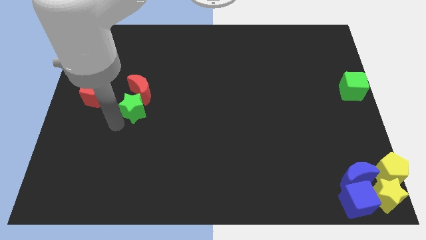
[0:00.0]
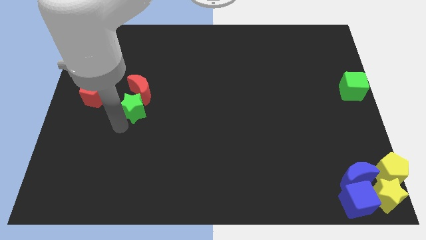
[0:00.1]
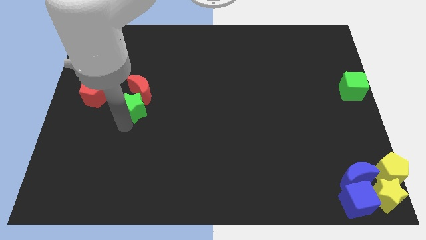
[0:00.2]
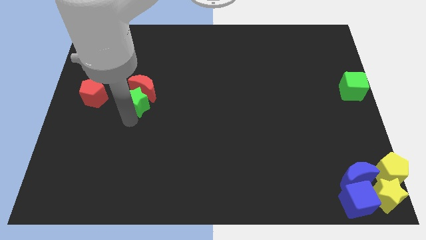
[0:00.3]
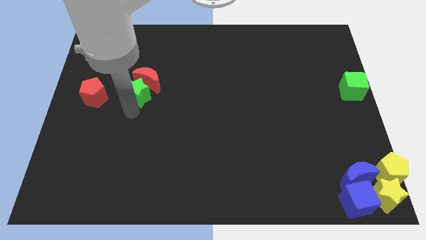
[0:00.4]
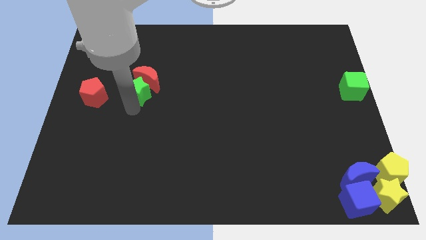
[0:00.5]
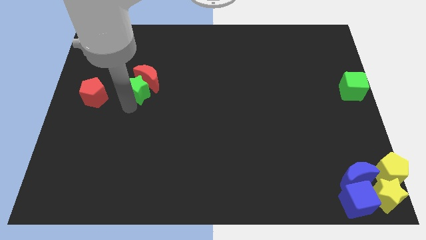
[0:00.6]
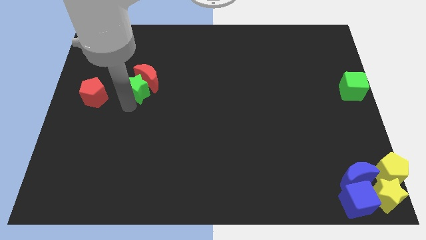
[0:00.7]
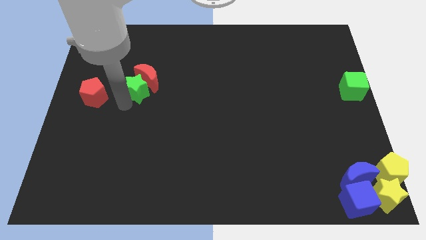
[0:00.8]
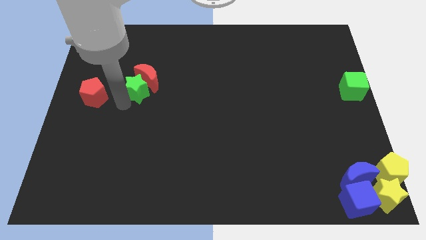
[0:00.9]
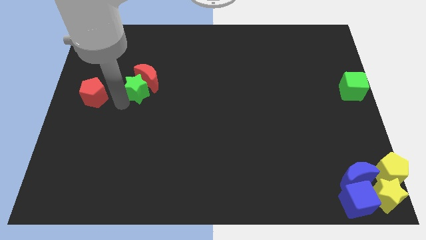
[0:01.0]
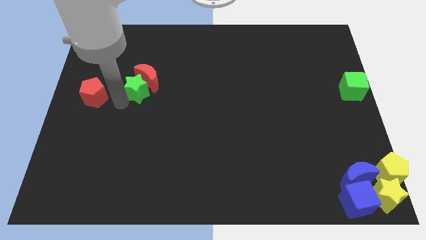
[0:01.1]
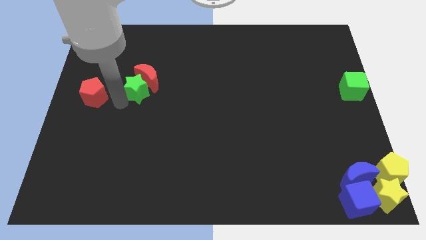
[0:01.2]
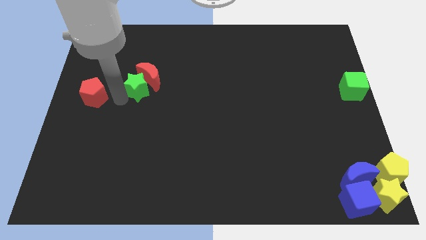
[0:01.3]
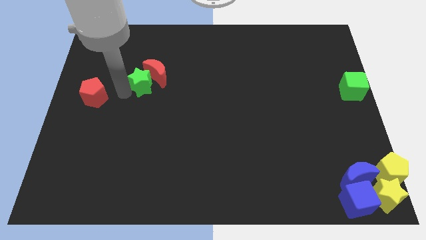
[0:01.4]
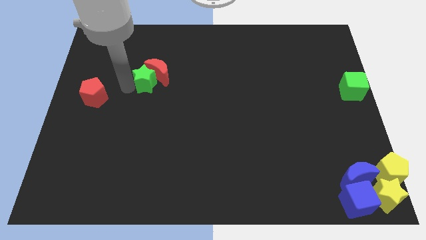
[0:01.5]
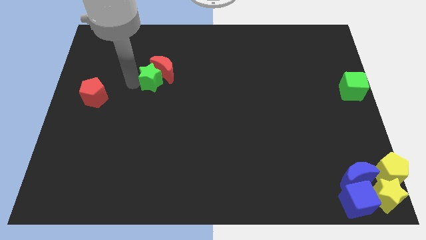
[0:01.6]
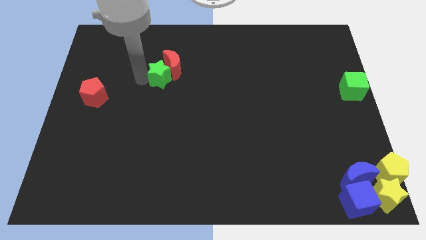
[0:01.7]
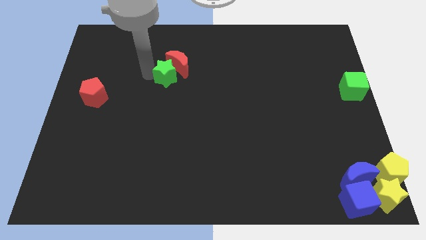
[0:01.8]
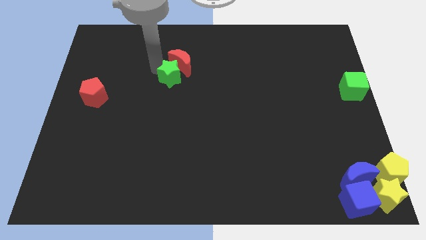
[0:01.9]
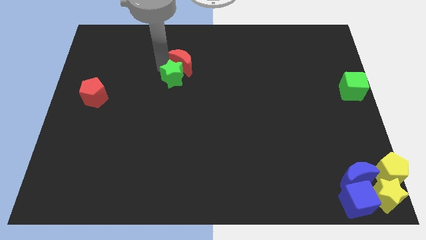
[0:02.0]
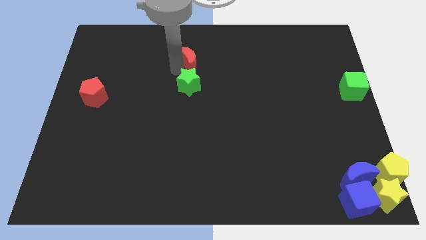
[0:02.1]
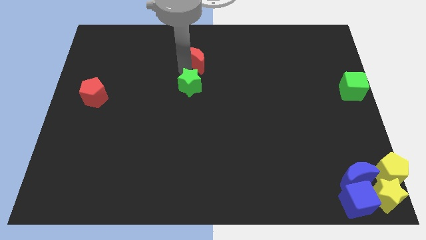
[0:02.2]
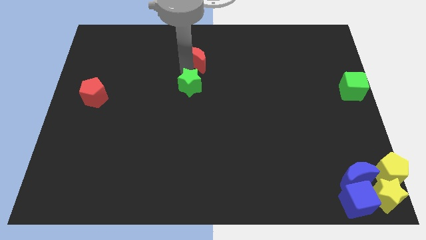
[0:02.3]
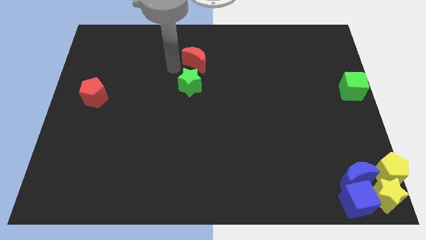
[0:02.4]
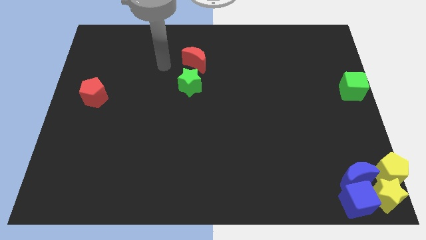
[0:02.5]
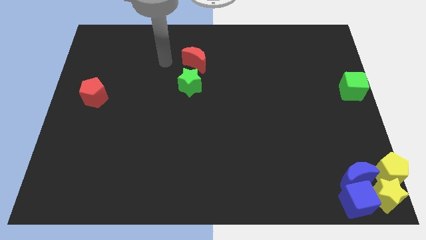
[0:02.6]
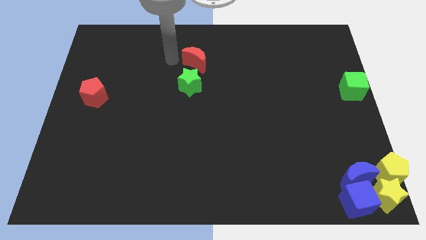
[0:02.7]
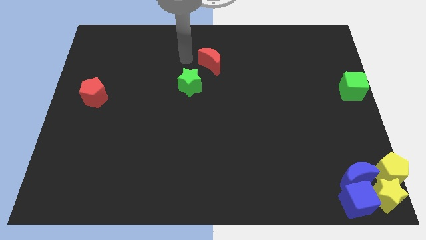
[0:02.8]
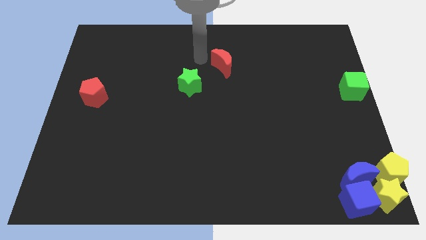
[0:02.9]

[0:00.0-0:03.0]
move the green star and the red crescent towards the center

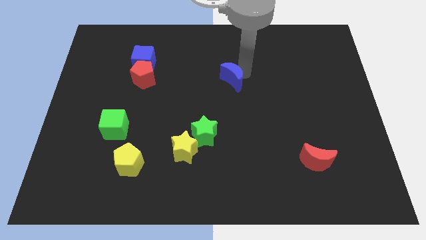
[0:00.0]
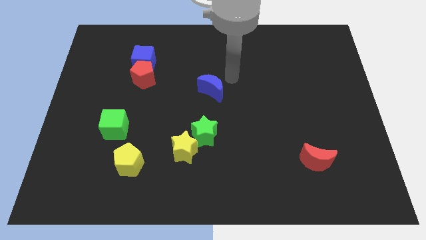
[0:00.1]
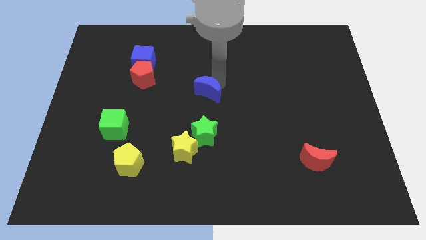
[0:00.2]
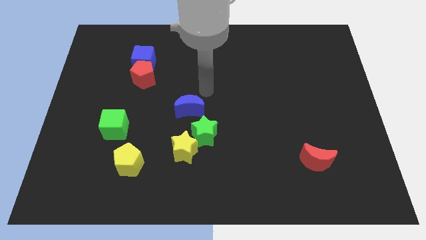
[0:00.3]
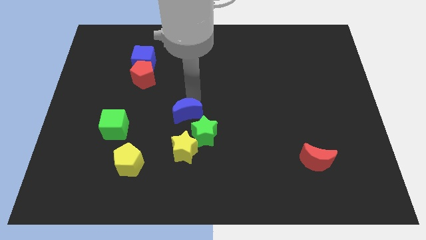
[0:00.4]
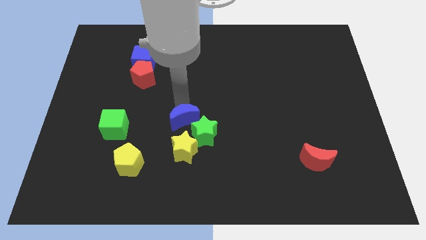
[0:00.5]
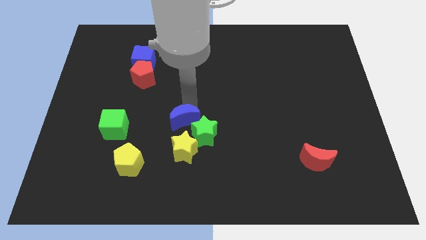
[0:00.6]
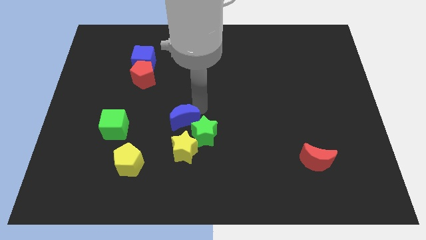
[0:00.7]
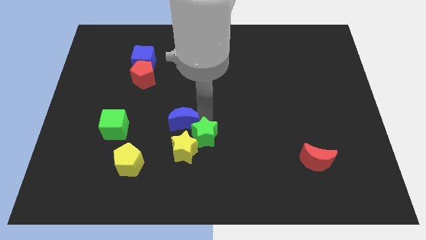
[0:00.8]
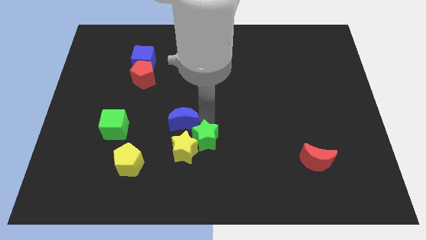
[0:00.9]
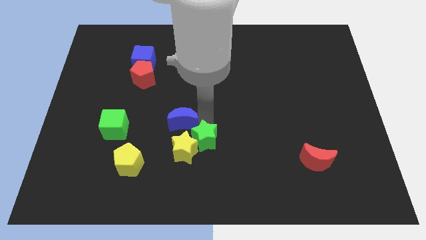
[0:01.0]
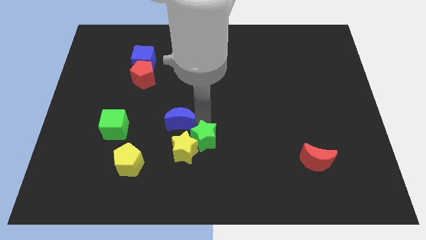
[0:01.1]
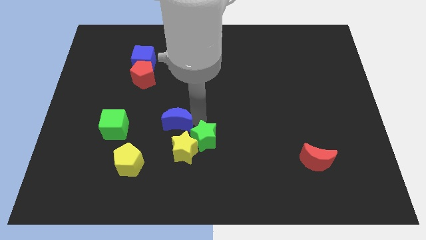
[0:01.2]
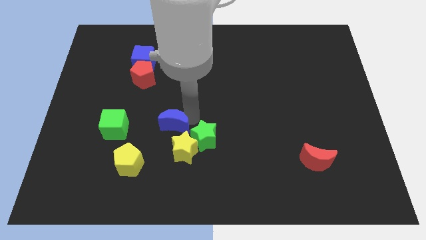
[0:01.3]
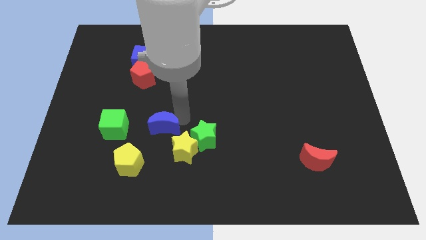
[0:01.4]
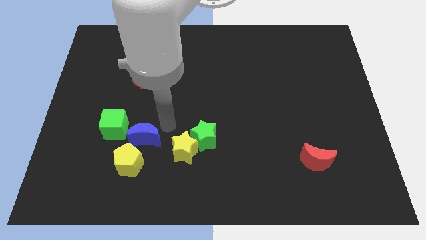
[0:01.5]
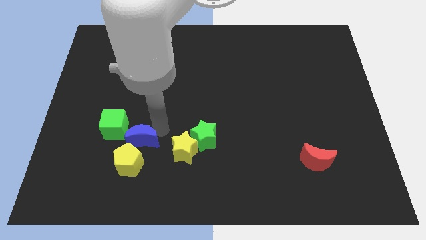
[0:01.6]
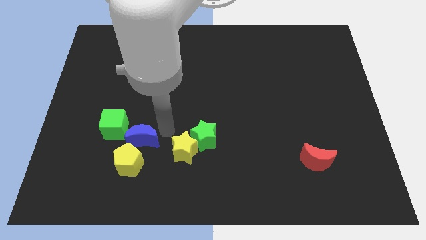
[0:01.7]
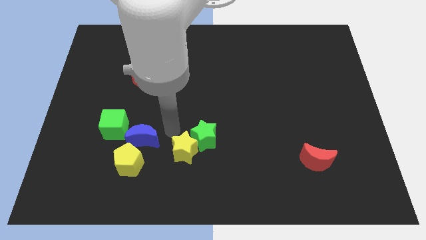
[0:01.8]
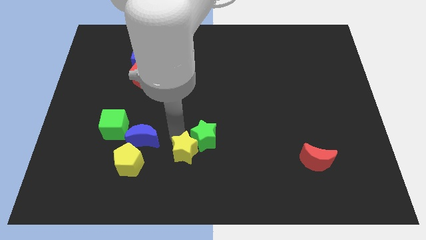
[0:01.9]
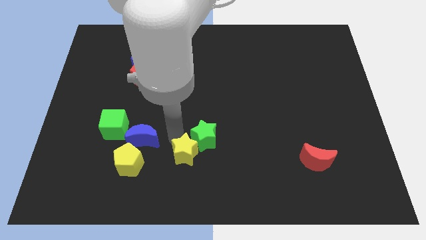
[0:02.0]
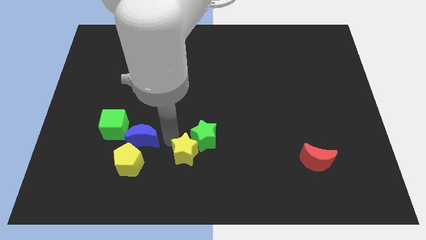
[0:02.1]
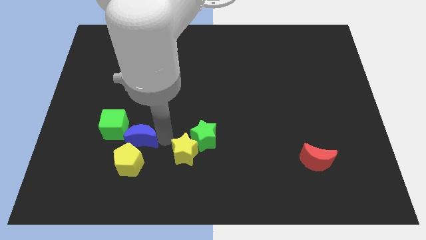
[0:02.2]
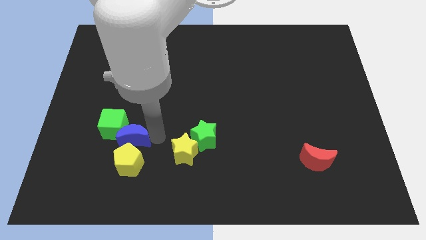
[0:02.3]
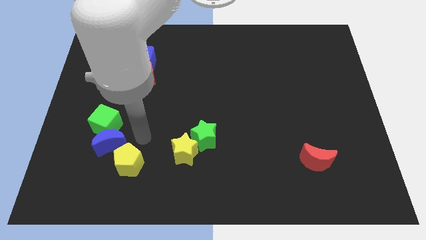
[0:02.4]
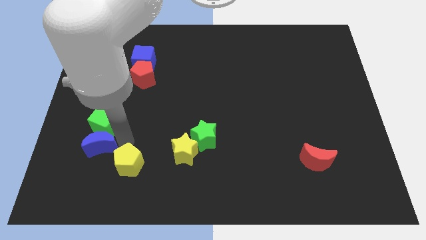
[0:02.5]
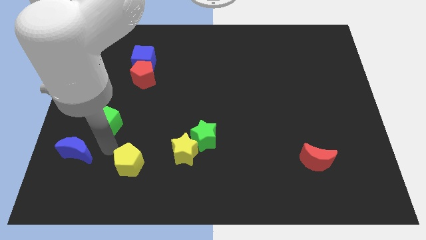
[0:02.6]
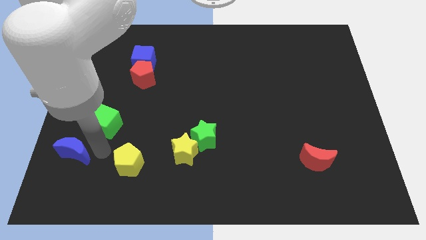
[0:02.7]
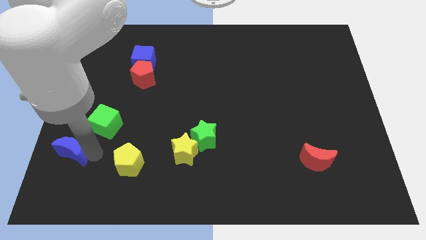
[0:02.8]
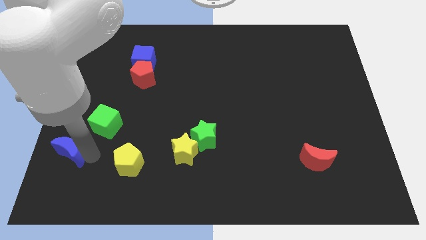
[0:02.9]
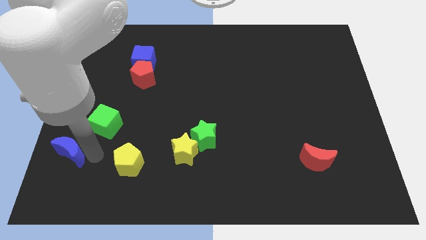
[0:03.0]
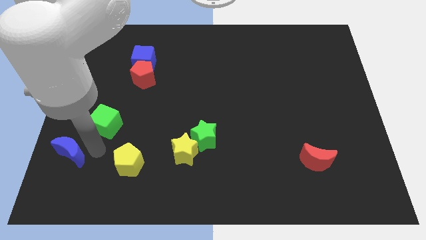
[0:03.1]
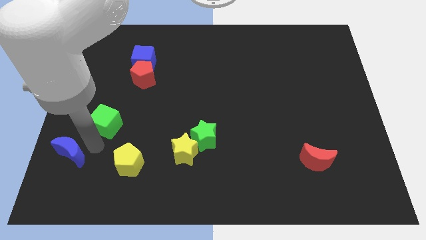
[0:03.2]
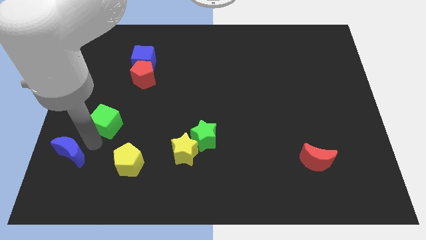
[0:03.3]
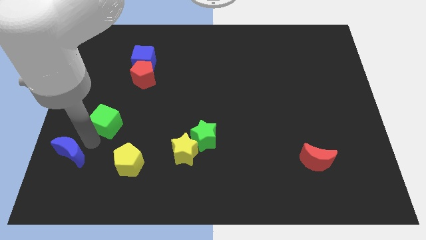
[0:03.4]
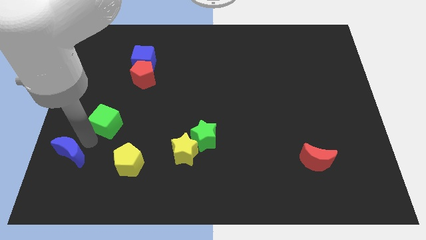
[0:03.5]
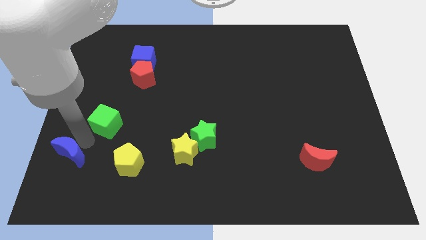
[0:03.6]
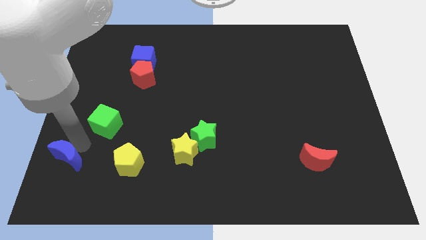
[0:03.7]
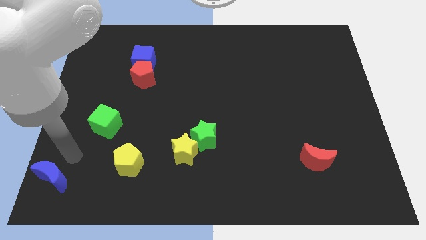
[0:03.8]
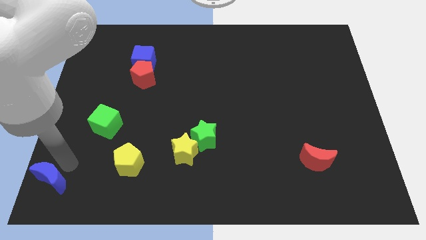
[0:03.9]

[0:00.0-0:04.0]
move blue moon to the bottom left

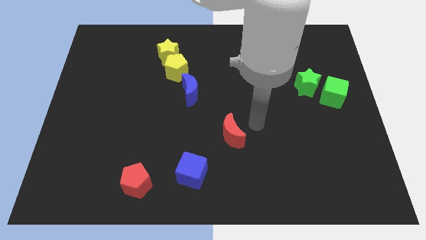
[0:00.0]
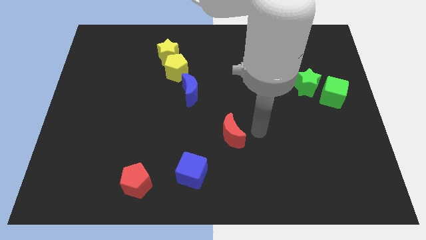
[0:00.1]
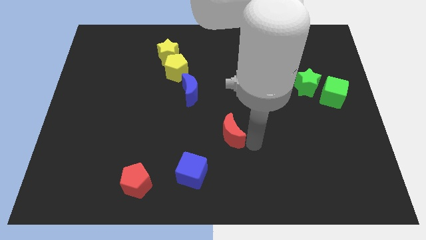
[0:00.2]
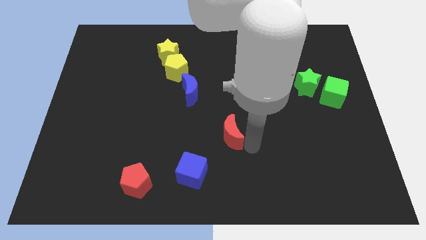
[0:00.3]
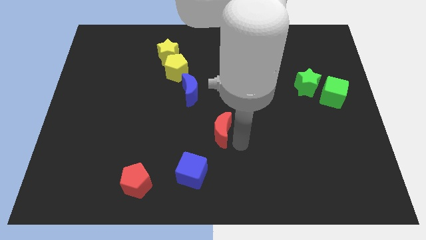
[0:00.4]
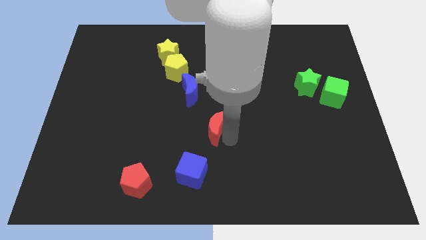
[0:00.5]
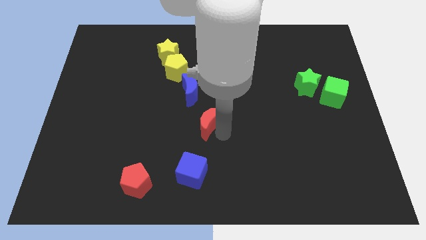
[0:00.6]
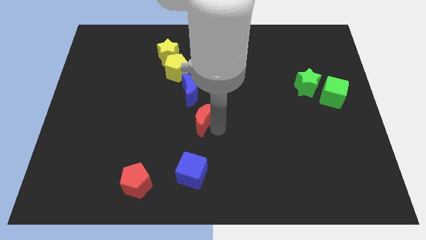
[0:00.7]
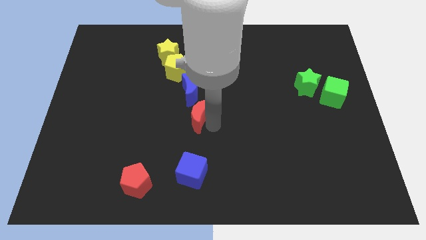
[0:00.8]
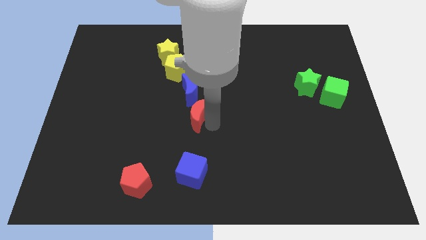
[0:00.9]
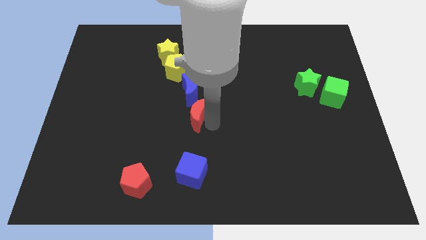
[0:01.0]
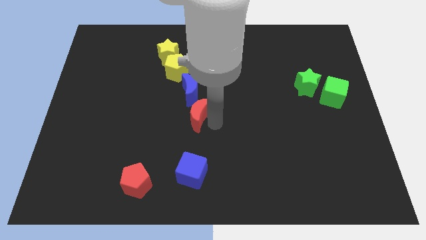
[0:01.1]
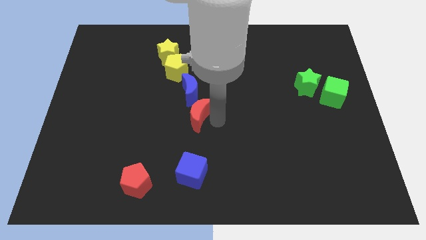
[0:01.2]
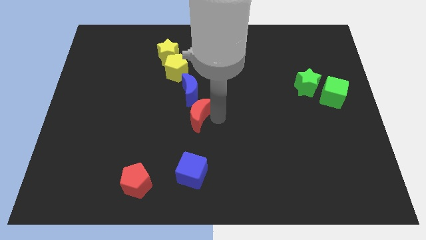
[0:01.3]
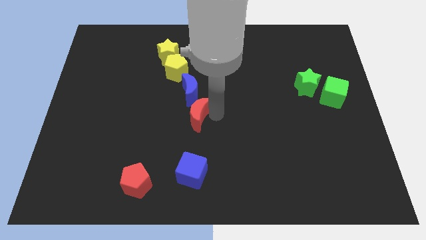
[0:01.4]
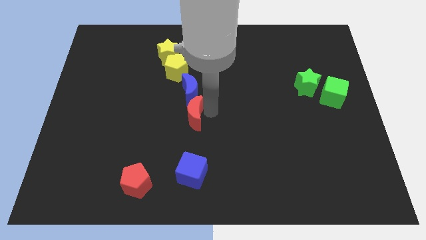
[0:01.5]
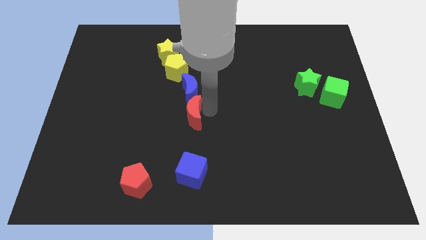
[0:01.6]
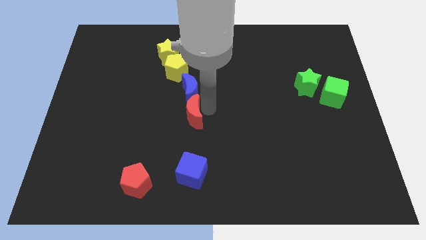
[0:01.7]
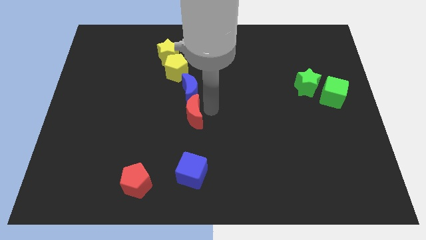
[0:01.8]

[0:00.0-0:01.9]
put the red pentagon vertically to the top side of the blue cube

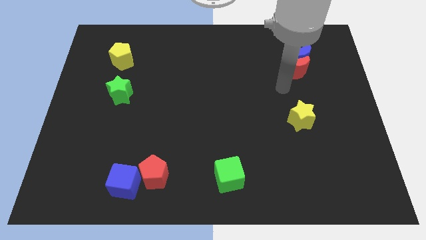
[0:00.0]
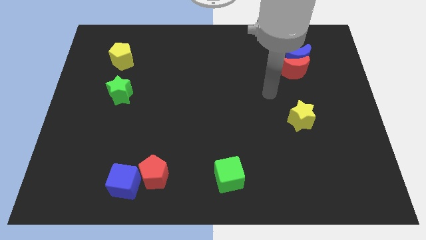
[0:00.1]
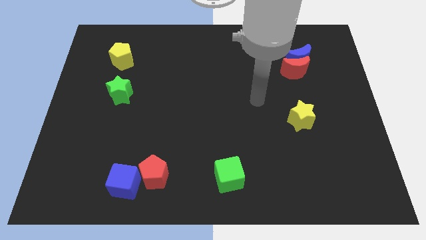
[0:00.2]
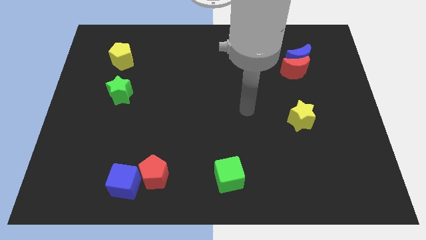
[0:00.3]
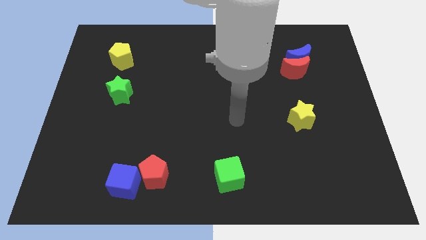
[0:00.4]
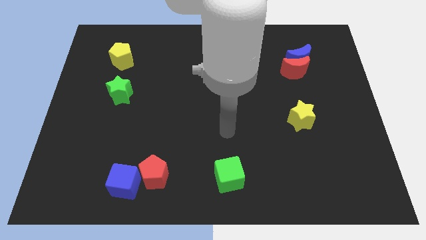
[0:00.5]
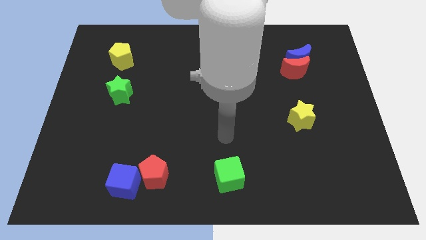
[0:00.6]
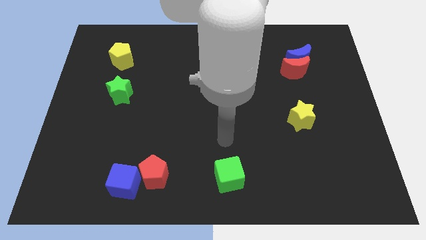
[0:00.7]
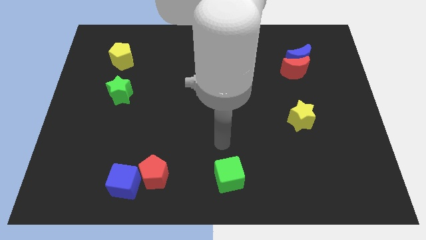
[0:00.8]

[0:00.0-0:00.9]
move the arm away from the red moon
